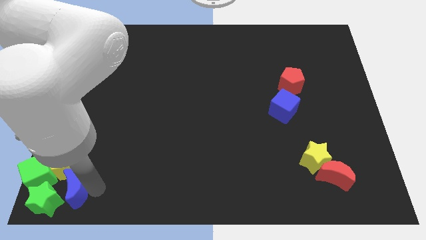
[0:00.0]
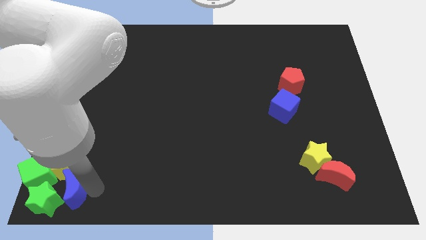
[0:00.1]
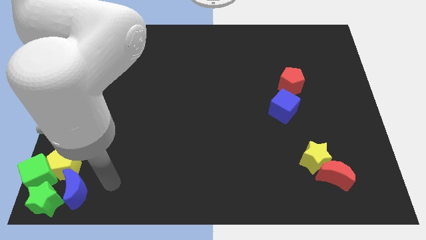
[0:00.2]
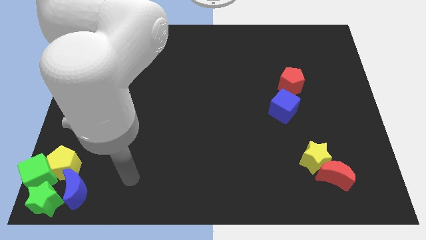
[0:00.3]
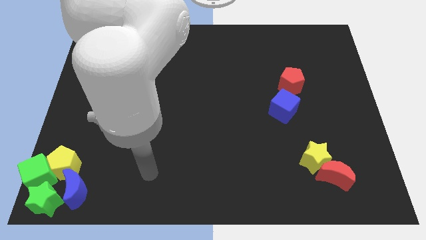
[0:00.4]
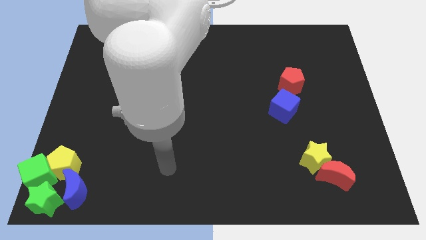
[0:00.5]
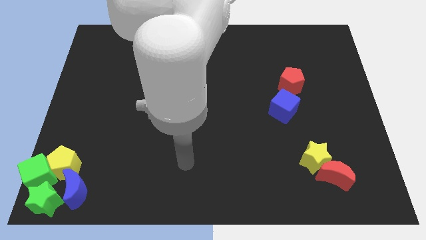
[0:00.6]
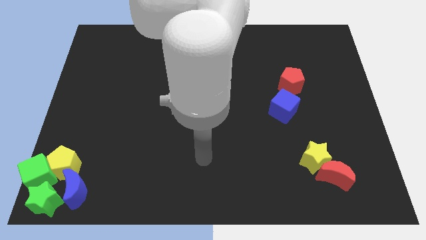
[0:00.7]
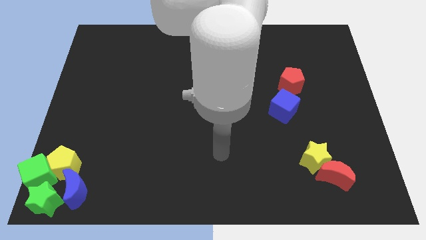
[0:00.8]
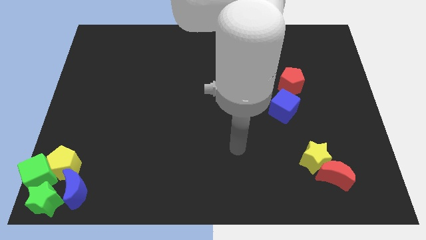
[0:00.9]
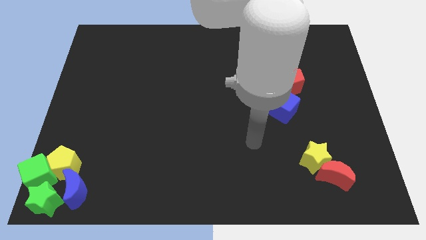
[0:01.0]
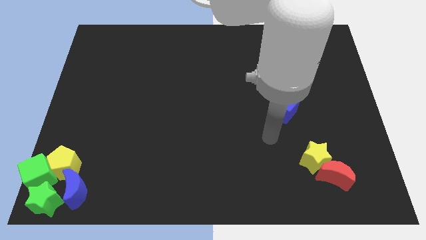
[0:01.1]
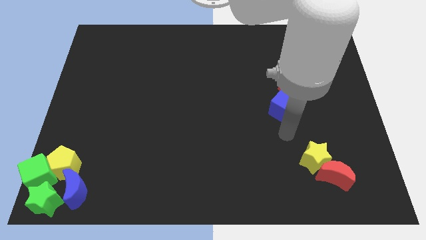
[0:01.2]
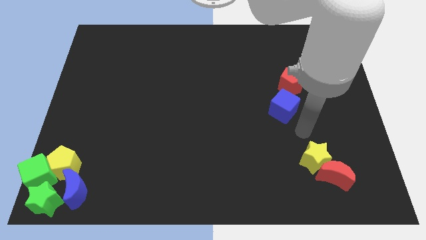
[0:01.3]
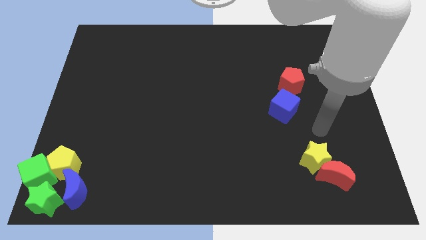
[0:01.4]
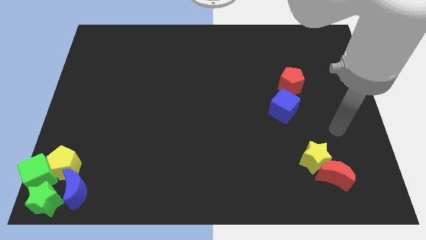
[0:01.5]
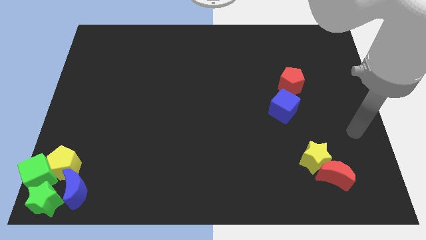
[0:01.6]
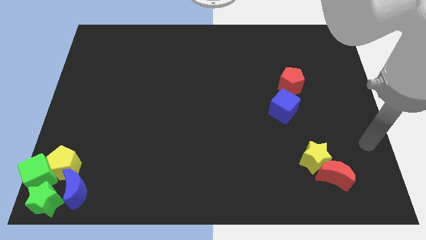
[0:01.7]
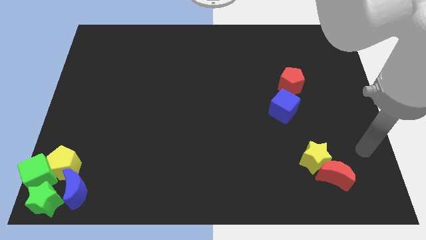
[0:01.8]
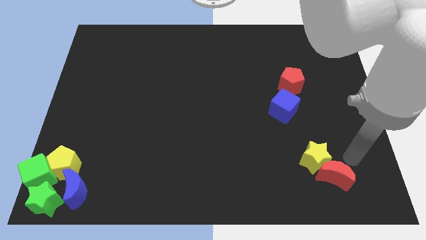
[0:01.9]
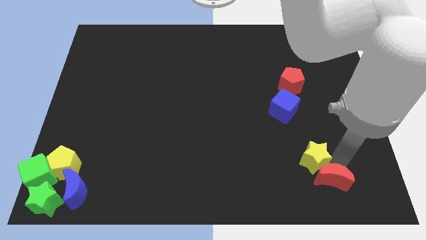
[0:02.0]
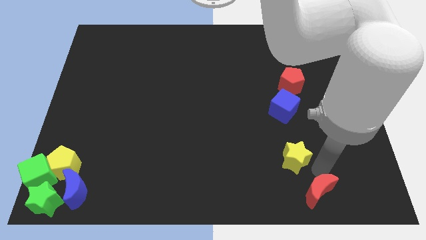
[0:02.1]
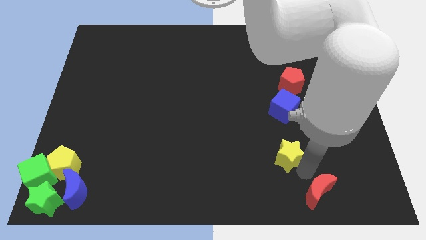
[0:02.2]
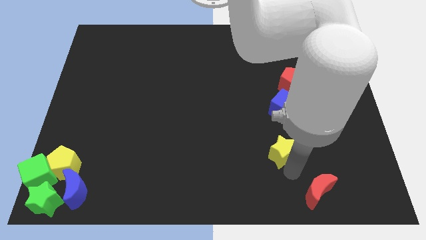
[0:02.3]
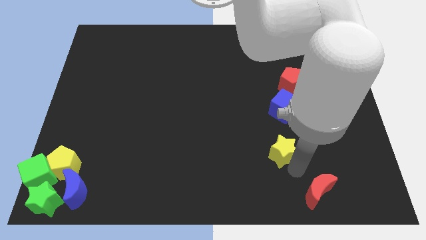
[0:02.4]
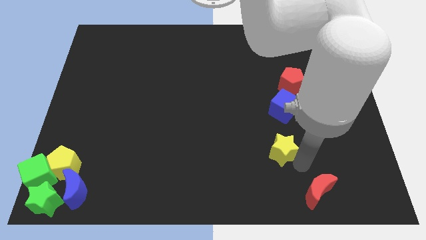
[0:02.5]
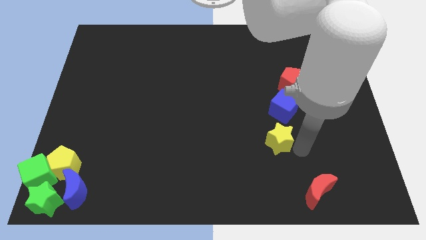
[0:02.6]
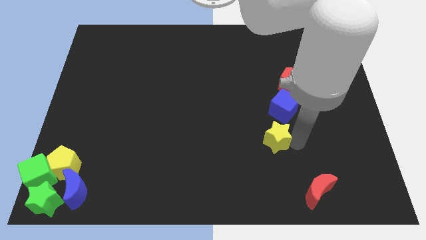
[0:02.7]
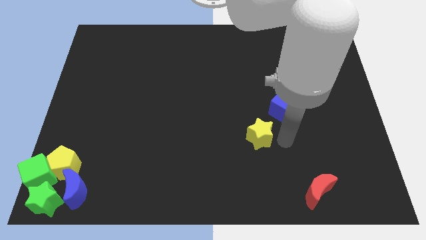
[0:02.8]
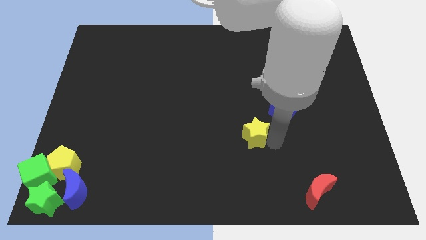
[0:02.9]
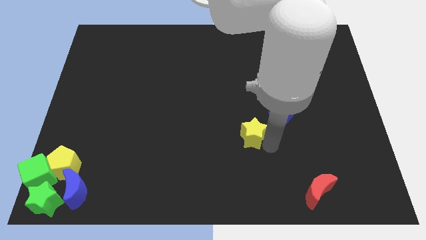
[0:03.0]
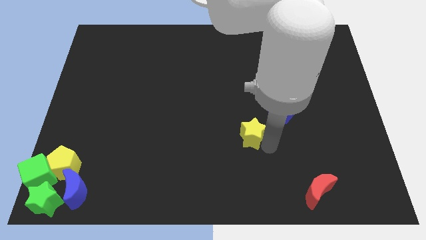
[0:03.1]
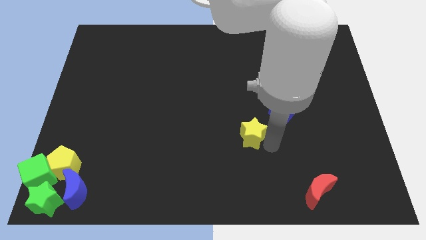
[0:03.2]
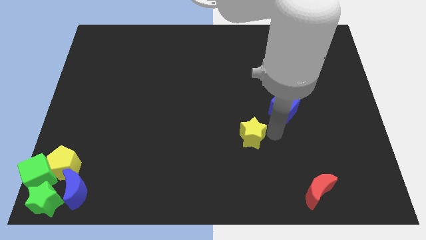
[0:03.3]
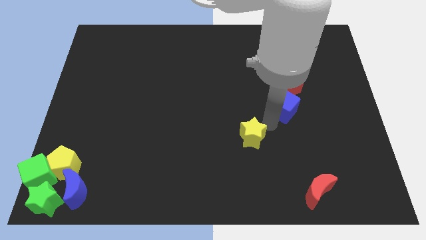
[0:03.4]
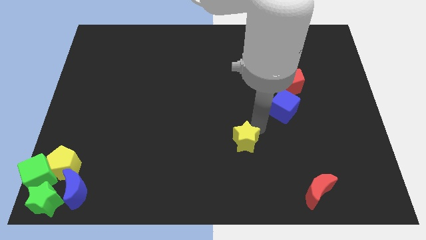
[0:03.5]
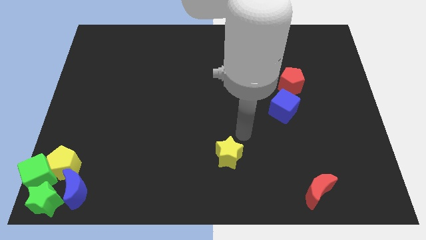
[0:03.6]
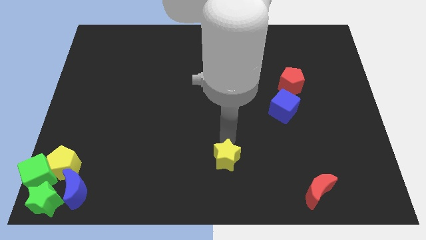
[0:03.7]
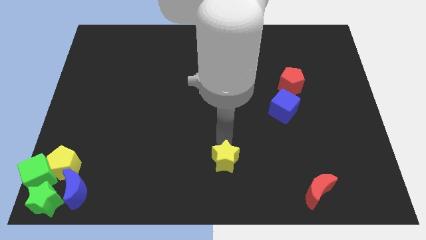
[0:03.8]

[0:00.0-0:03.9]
separate the yellow star from the red crescent

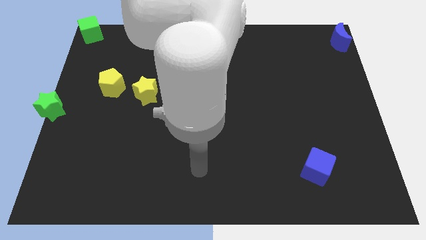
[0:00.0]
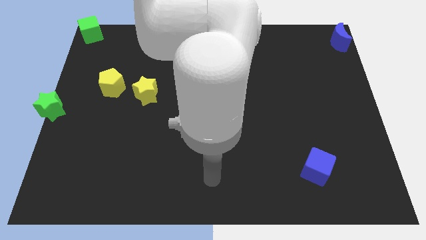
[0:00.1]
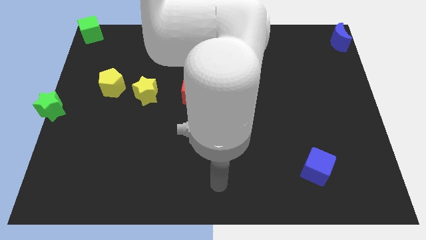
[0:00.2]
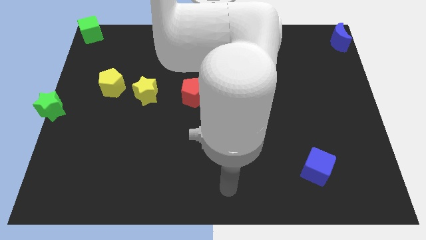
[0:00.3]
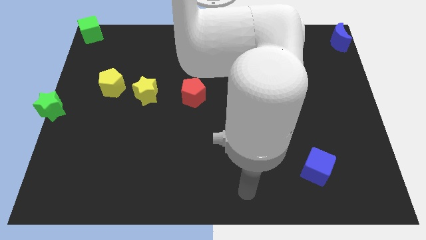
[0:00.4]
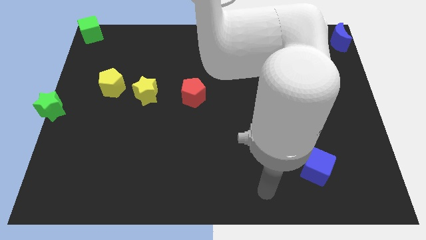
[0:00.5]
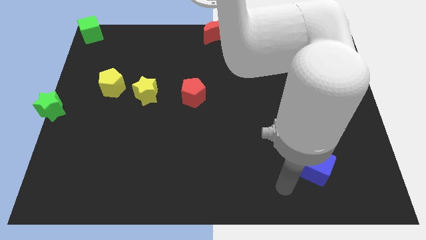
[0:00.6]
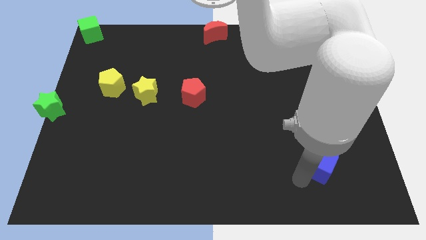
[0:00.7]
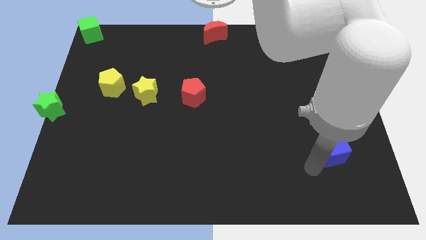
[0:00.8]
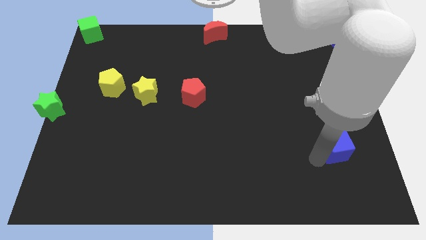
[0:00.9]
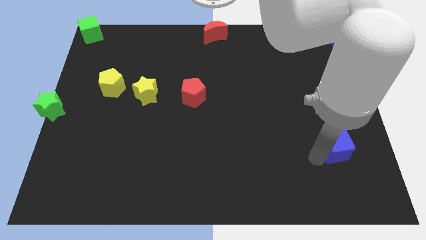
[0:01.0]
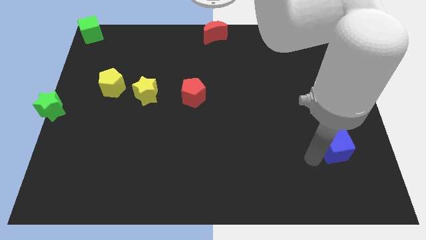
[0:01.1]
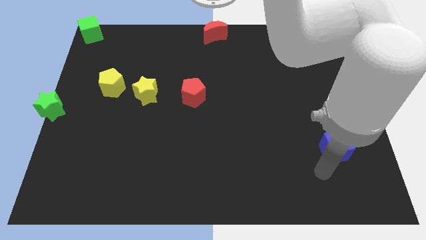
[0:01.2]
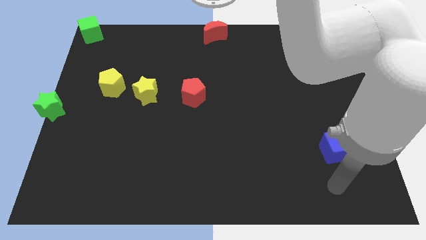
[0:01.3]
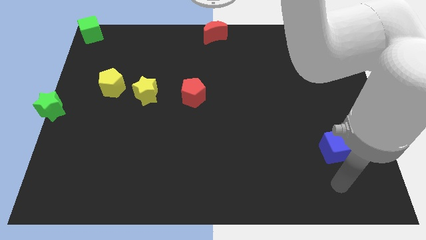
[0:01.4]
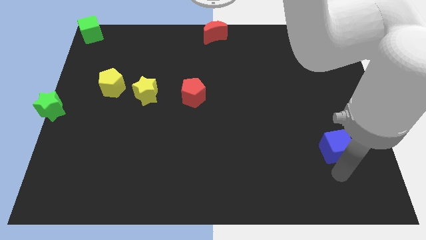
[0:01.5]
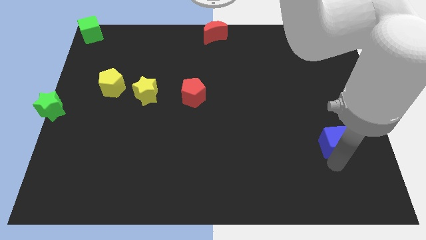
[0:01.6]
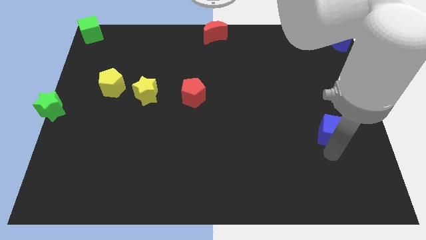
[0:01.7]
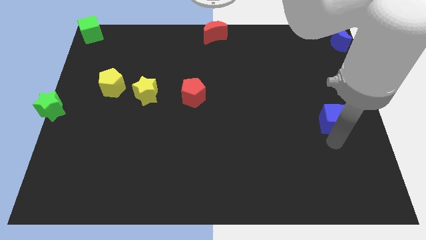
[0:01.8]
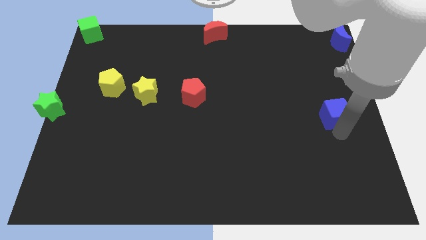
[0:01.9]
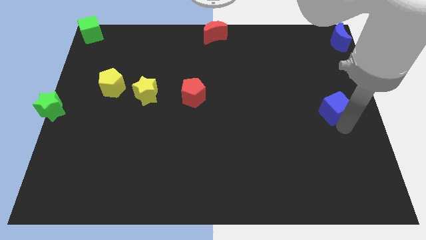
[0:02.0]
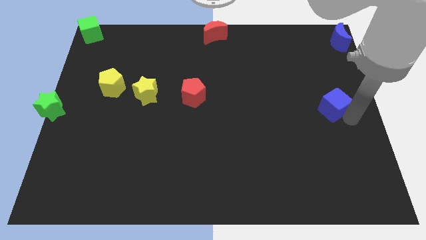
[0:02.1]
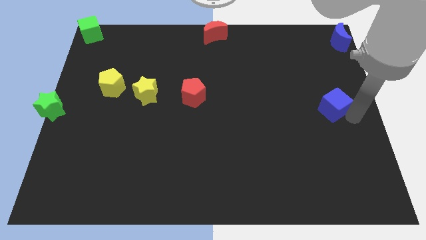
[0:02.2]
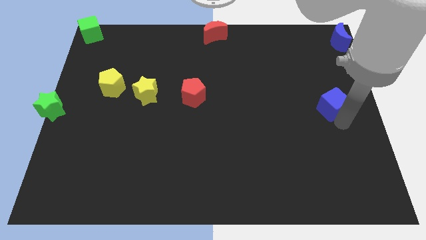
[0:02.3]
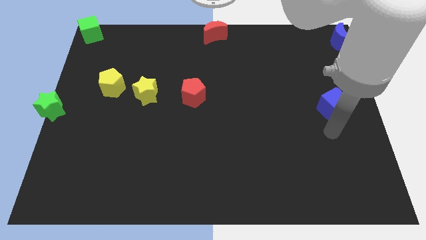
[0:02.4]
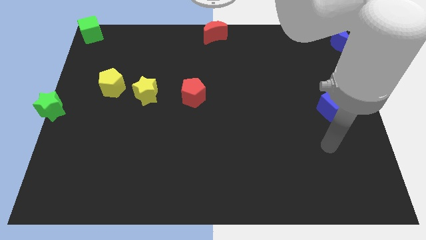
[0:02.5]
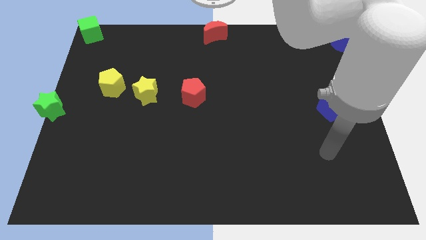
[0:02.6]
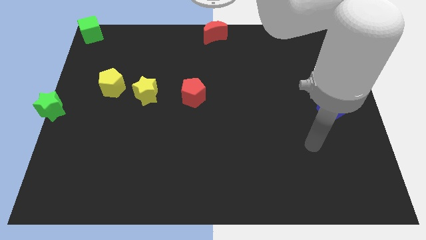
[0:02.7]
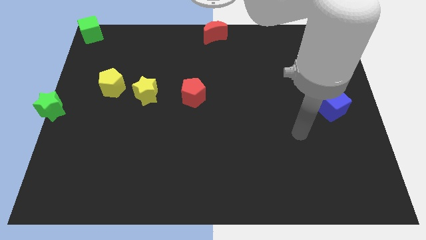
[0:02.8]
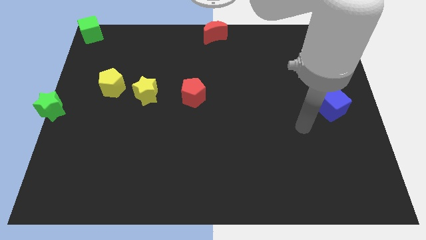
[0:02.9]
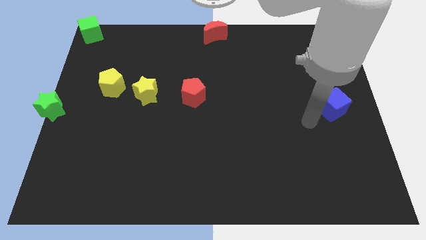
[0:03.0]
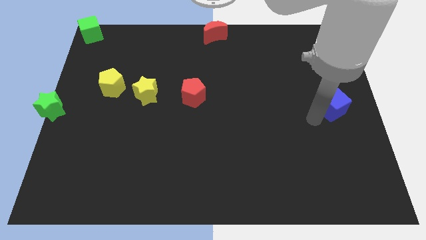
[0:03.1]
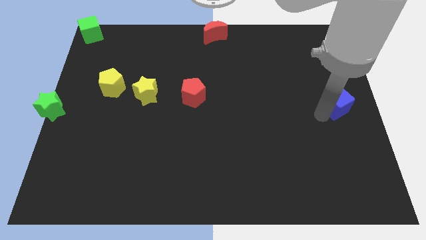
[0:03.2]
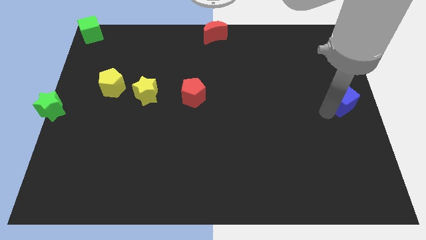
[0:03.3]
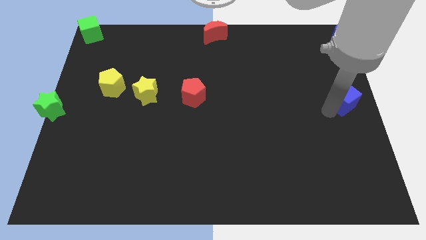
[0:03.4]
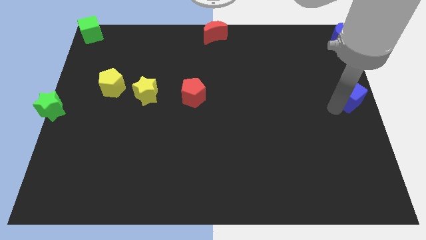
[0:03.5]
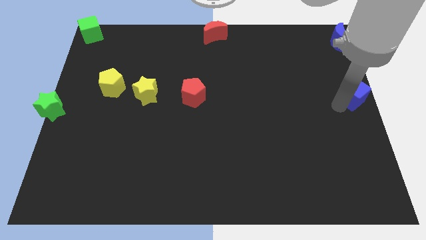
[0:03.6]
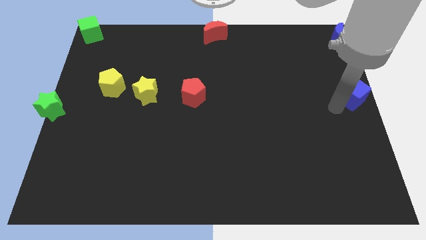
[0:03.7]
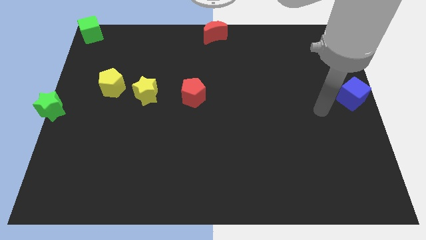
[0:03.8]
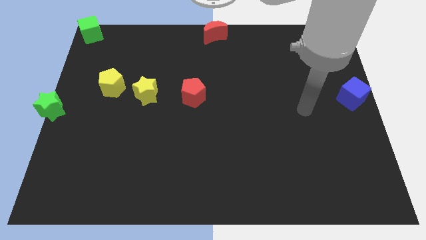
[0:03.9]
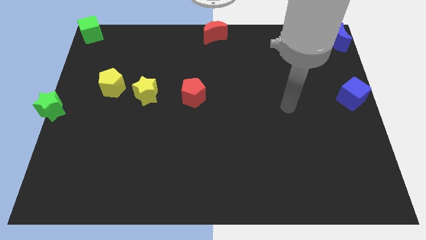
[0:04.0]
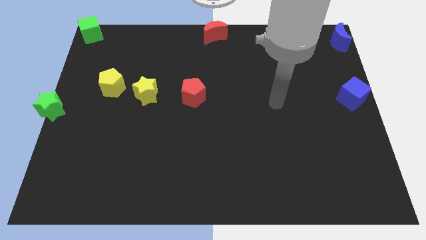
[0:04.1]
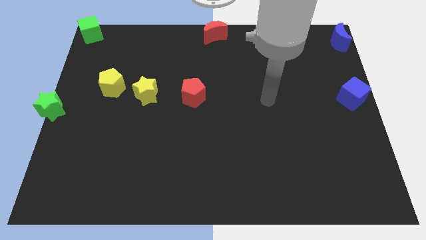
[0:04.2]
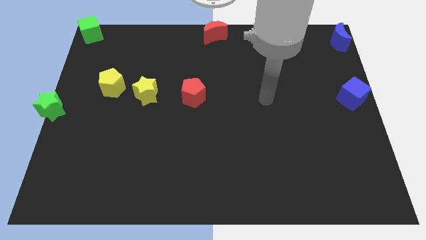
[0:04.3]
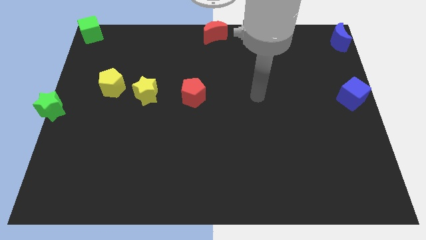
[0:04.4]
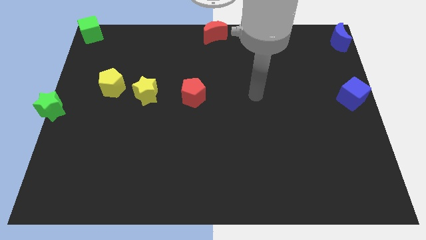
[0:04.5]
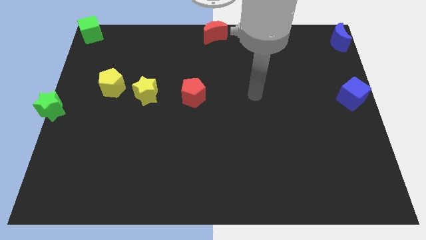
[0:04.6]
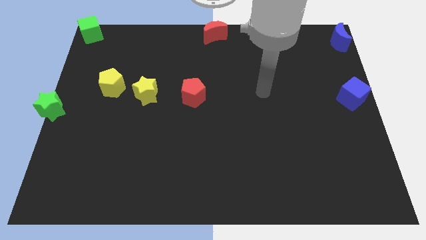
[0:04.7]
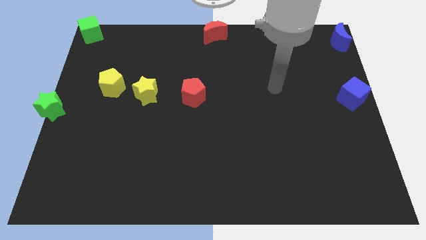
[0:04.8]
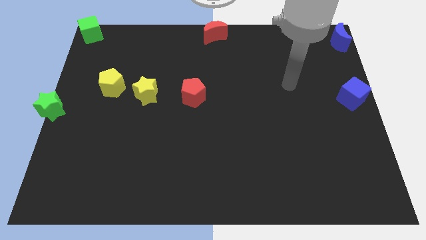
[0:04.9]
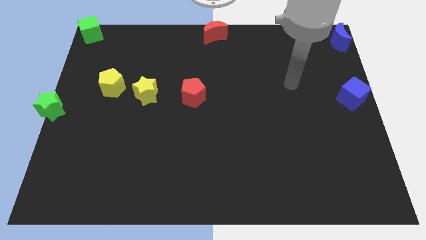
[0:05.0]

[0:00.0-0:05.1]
push the blue cube to the center right of the board
